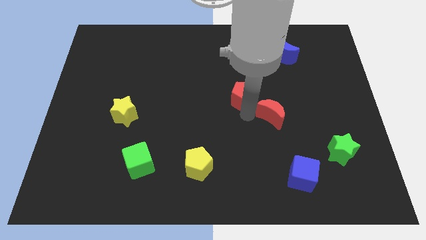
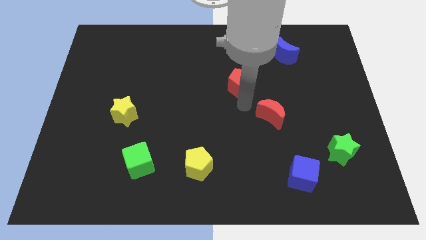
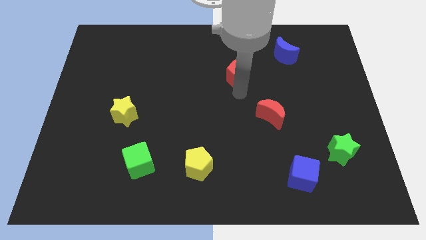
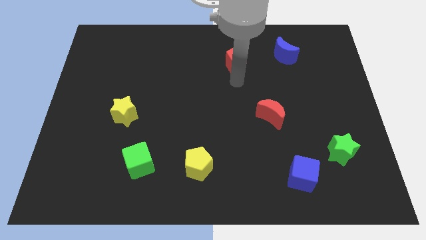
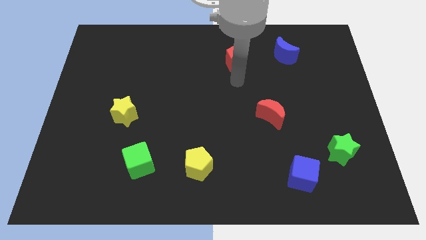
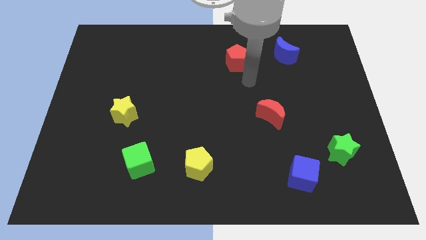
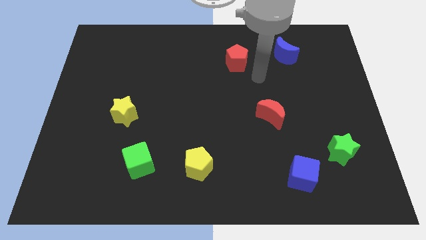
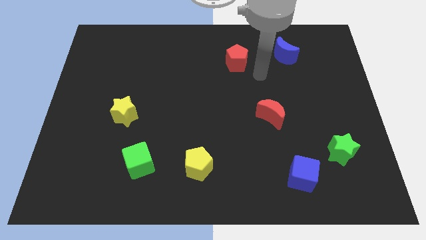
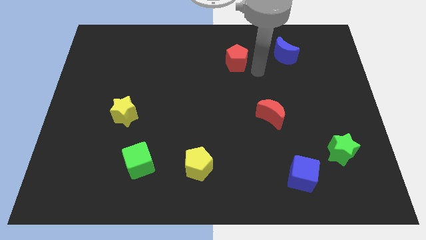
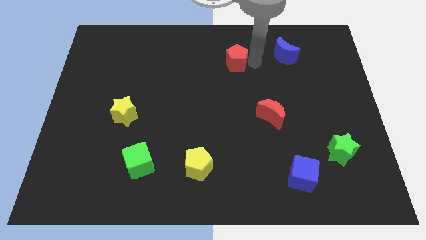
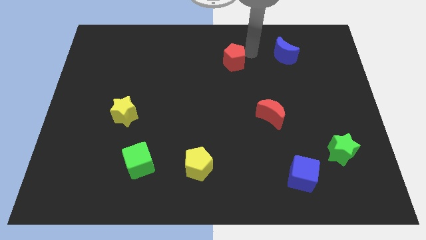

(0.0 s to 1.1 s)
move red pentagon slightly up

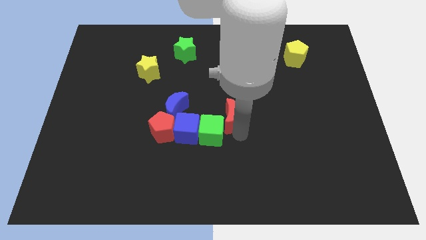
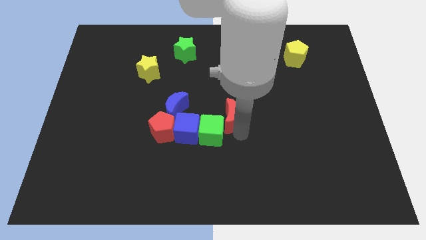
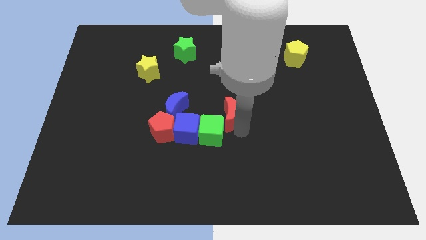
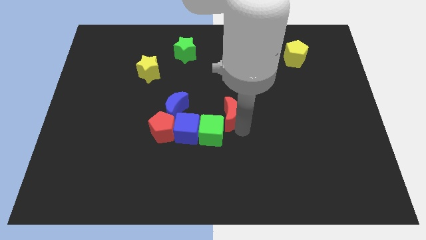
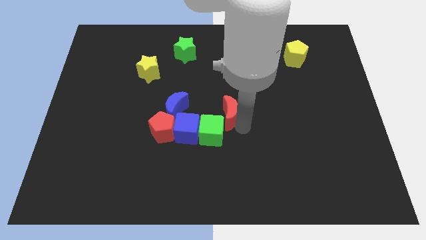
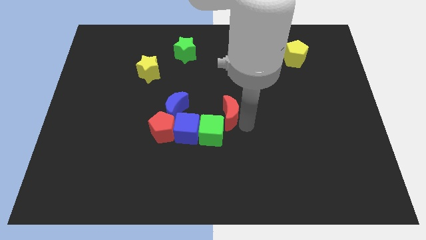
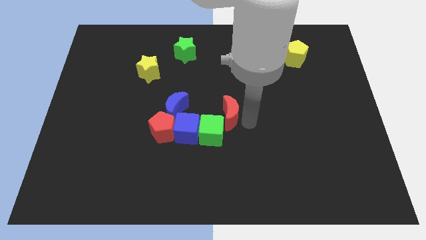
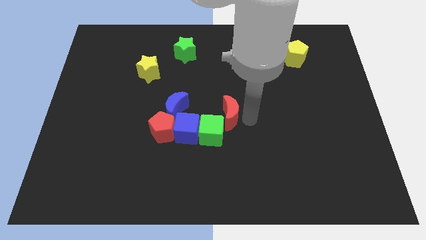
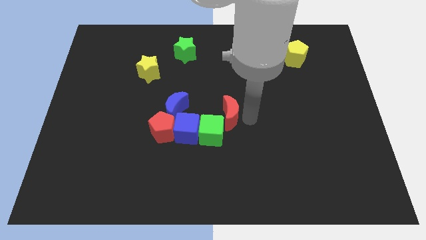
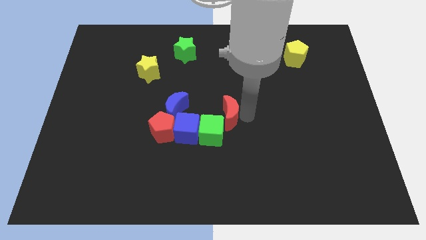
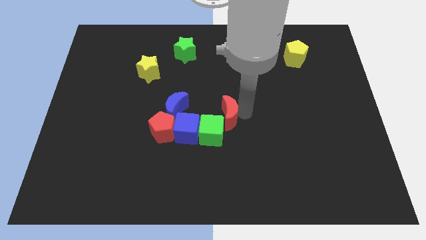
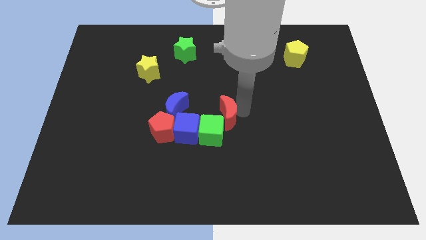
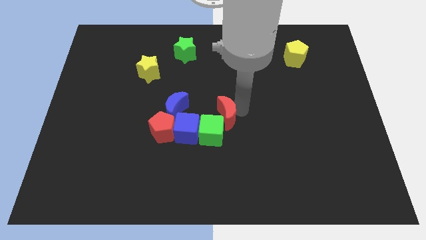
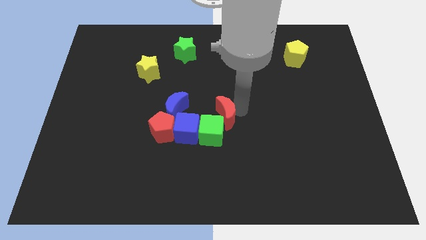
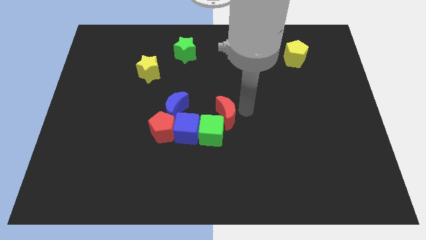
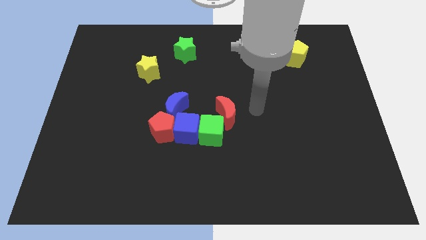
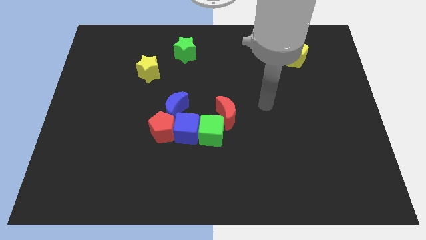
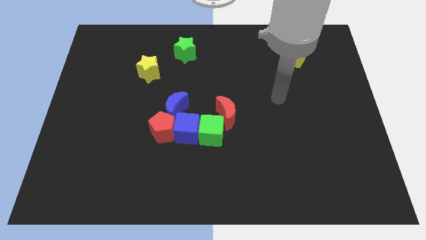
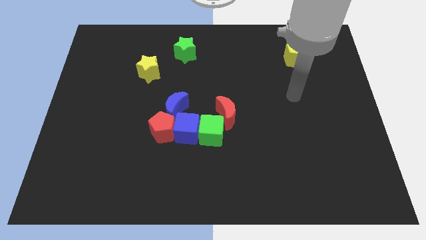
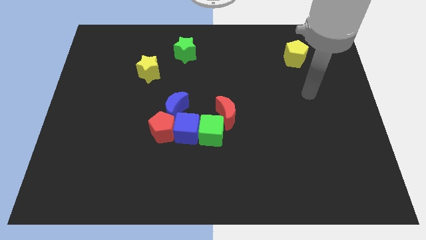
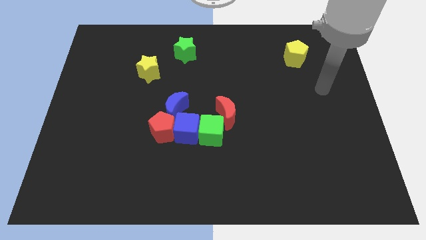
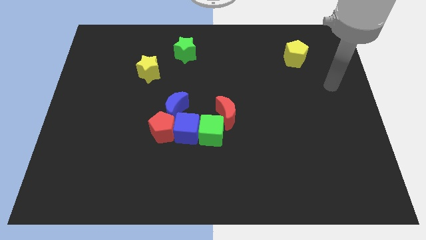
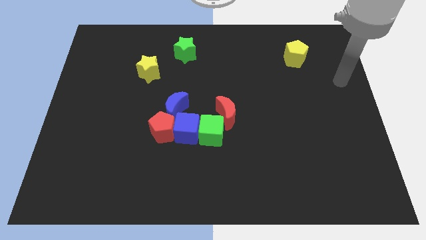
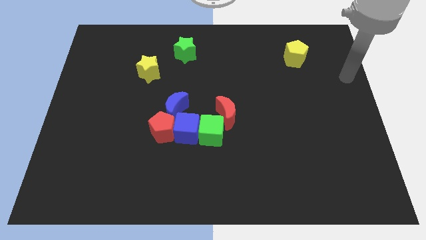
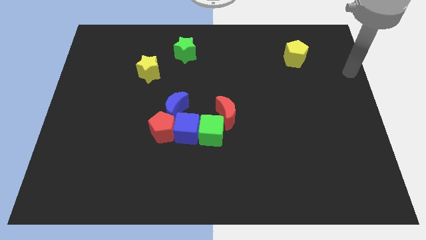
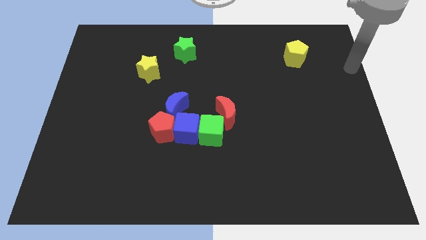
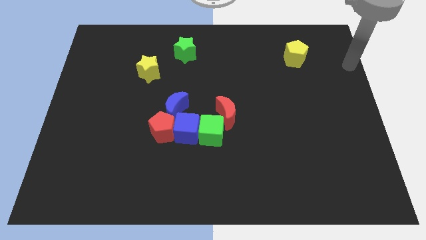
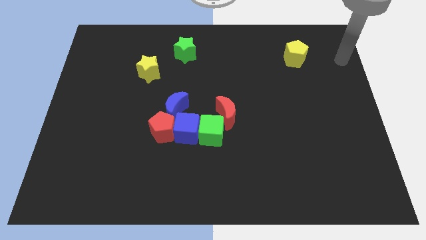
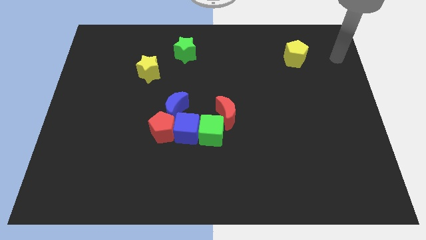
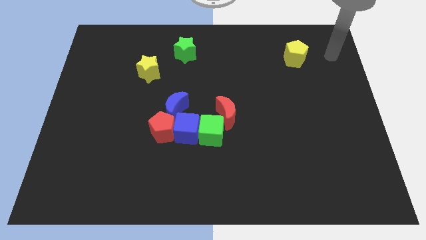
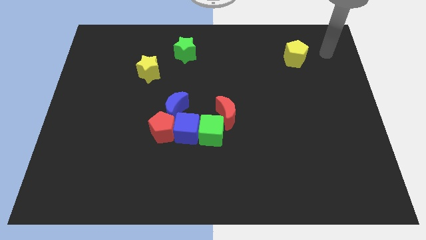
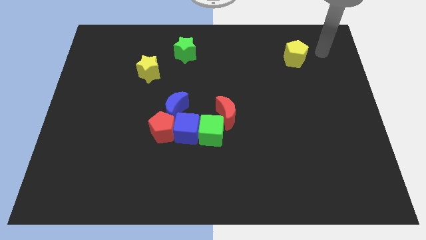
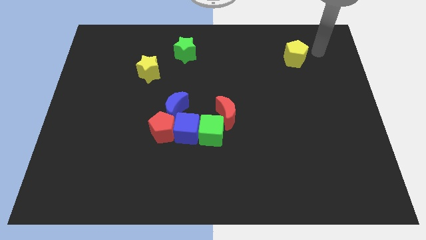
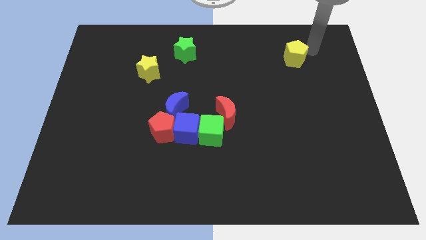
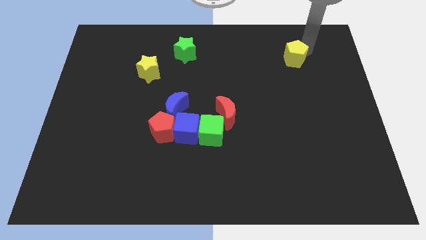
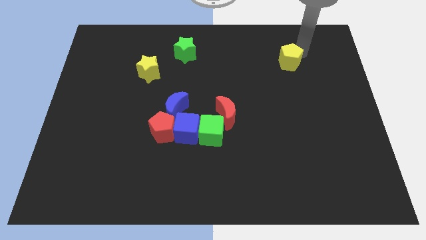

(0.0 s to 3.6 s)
place the arm near the yellow pentagon

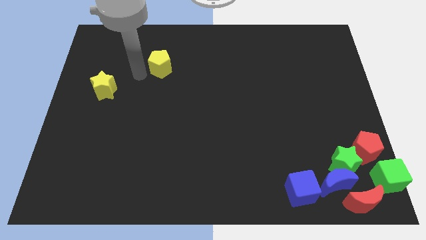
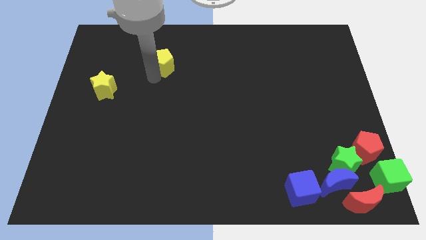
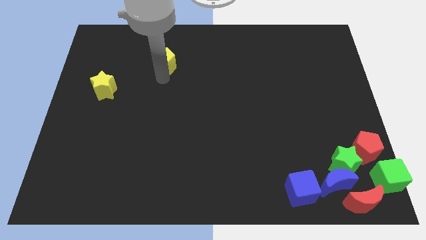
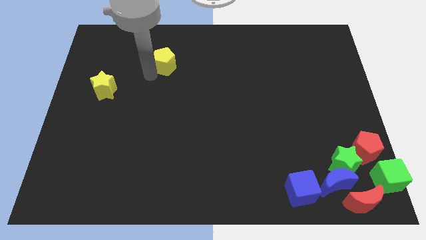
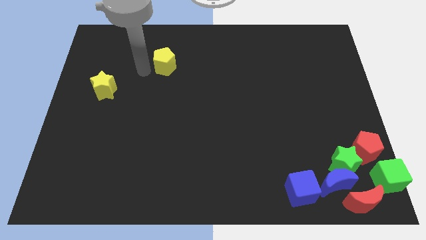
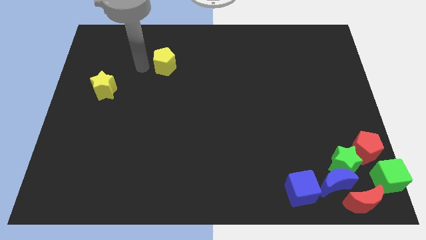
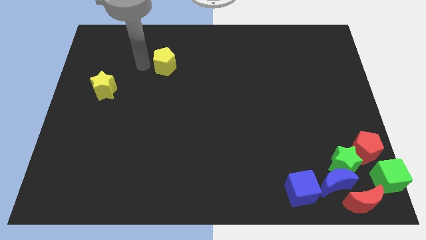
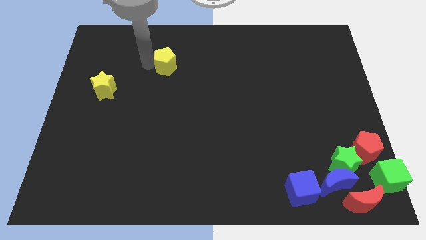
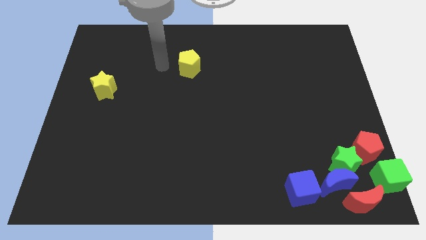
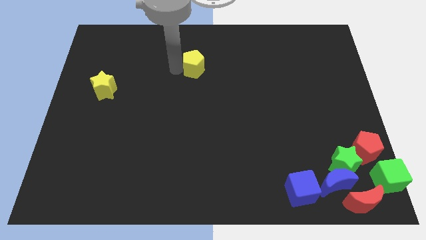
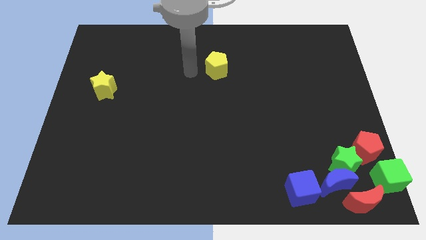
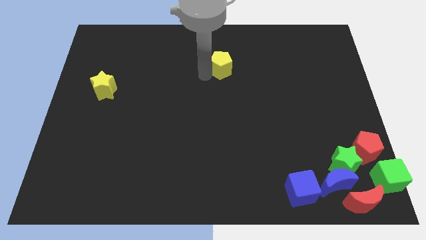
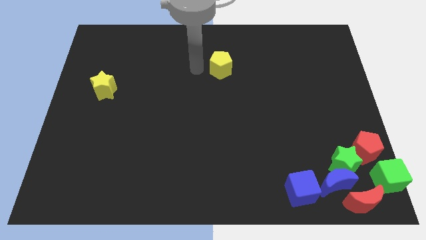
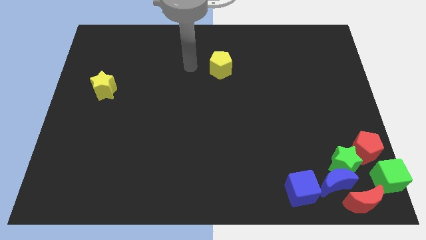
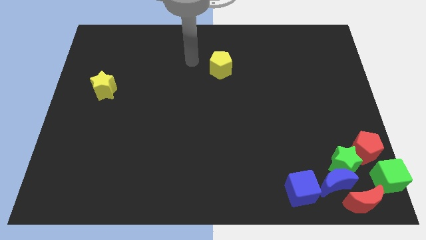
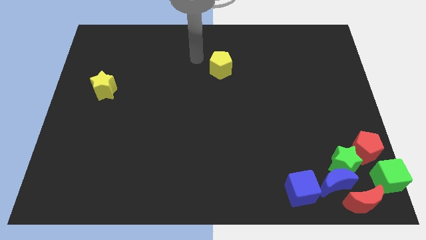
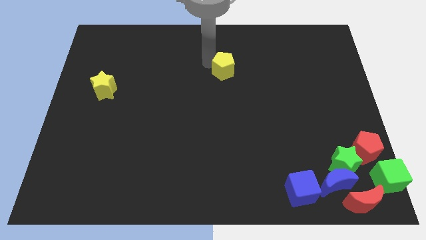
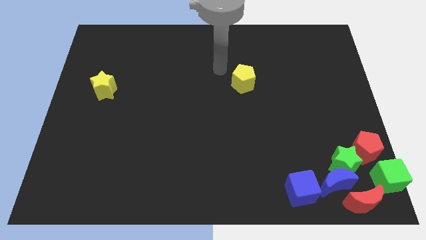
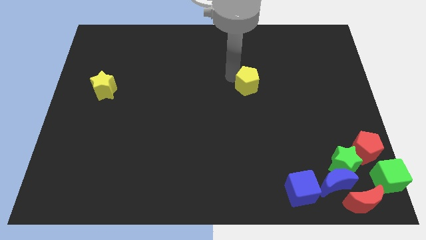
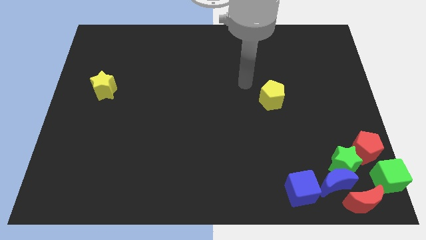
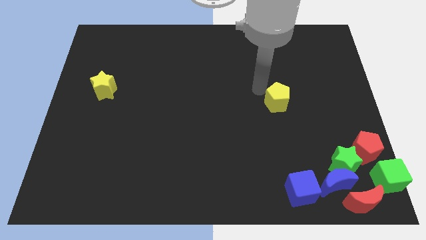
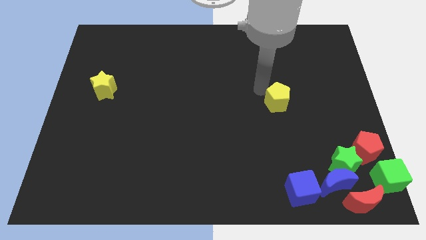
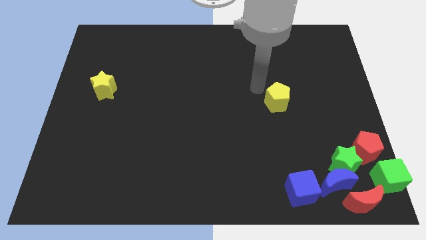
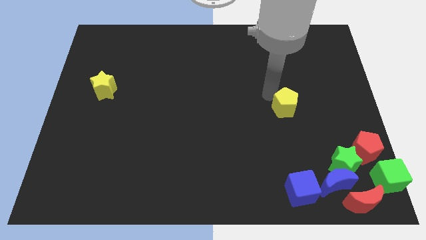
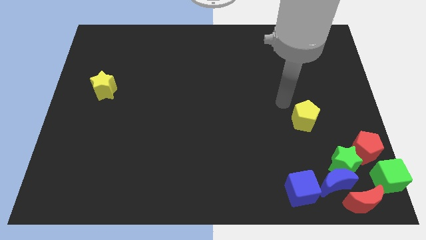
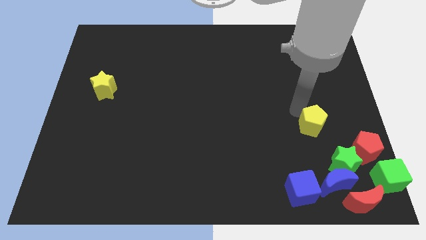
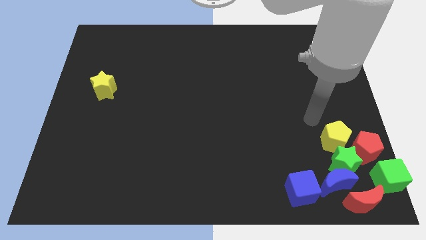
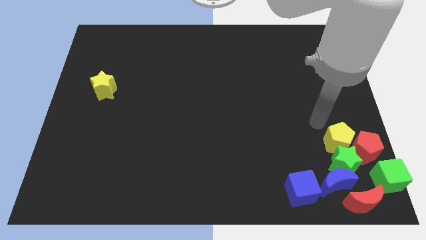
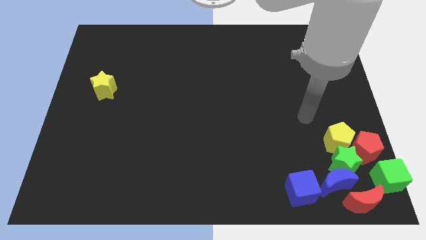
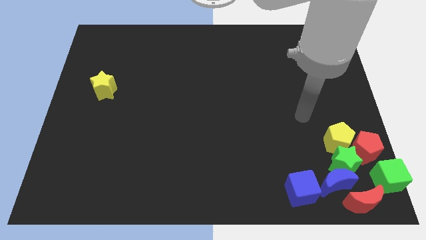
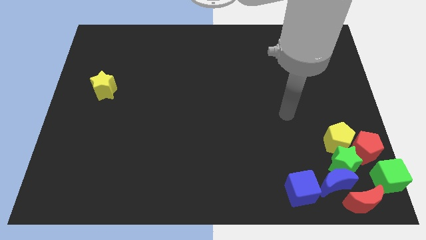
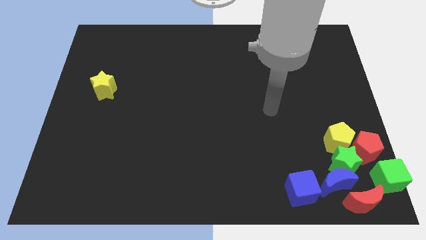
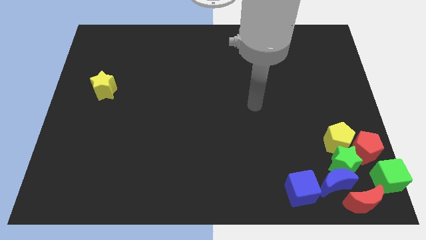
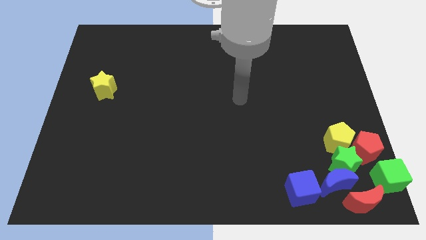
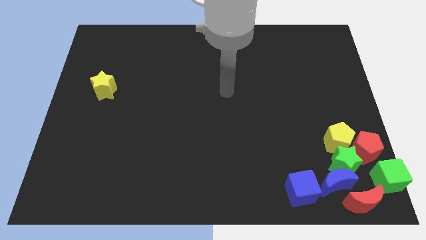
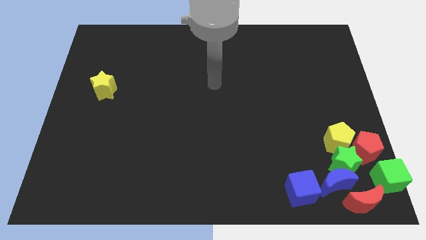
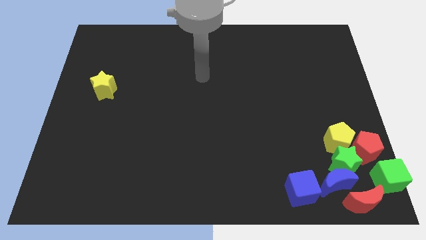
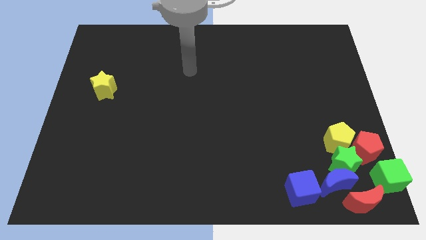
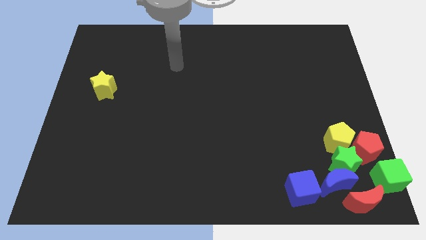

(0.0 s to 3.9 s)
push the yellow pentagon towards the bottom right side of the board

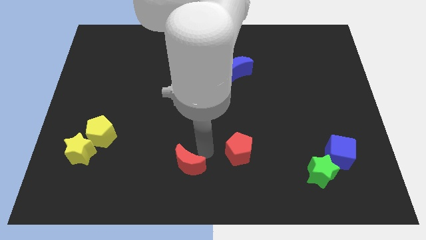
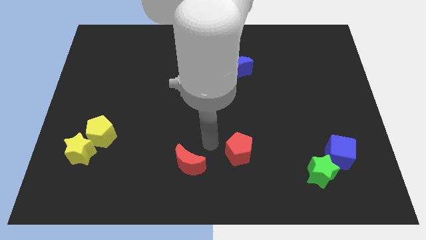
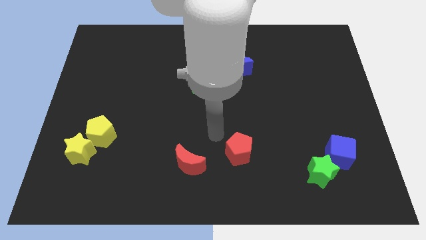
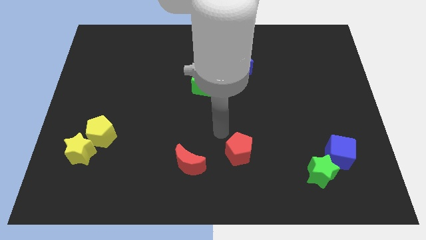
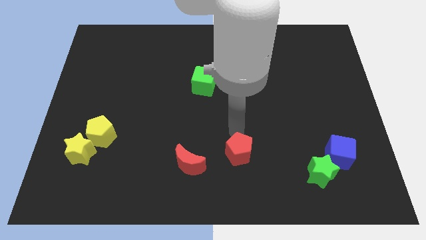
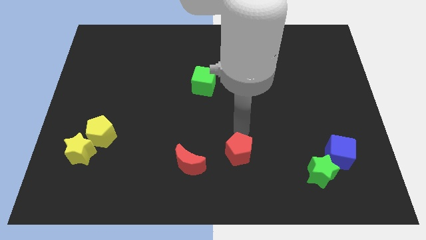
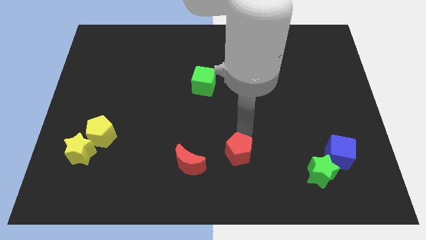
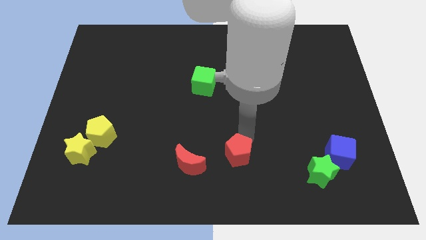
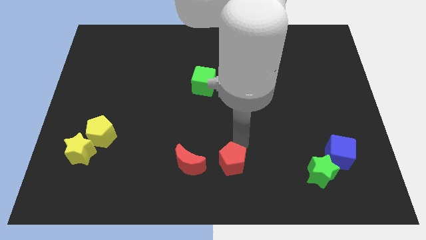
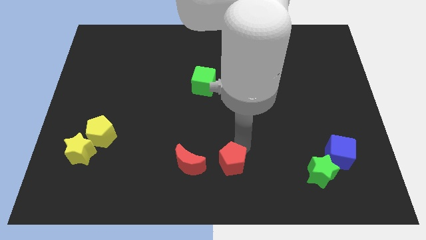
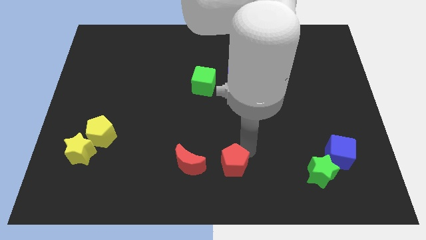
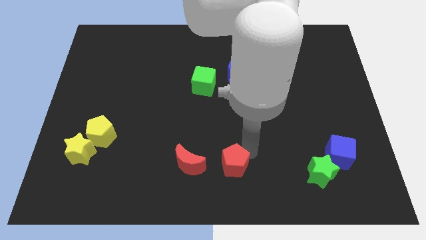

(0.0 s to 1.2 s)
move the red pentagon right beside the red moon
